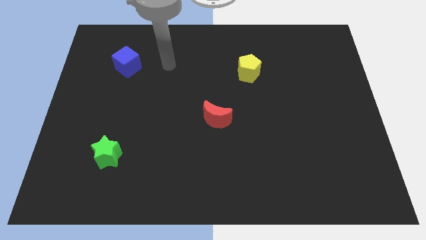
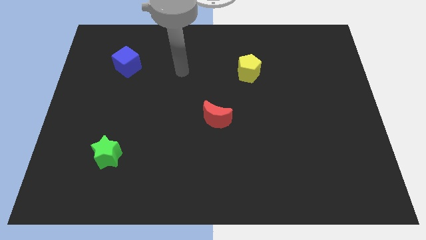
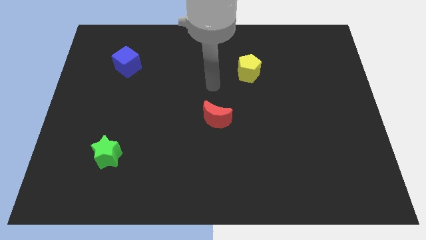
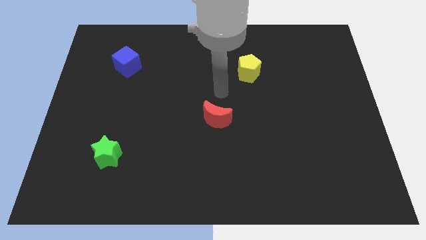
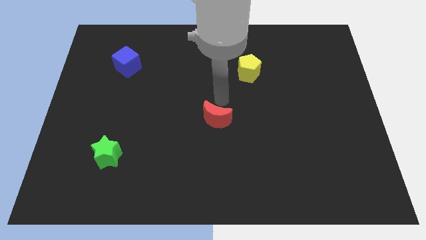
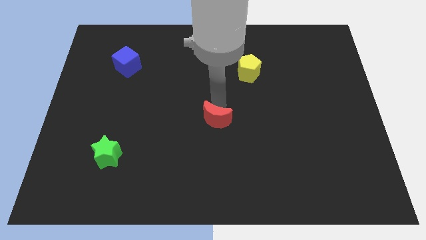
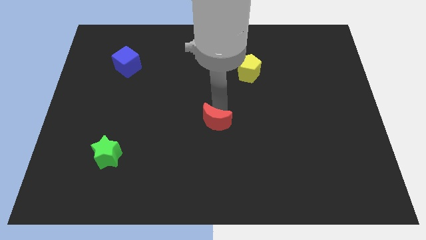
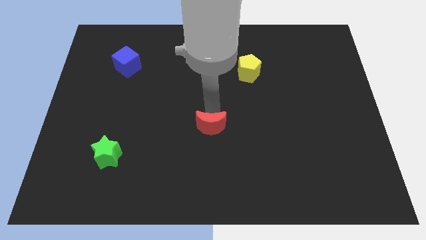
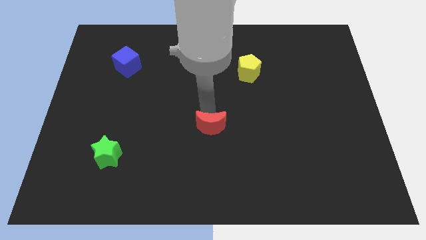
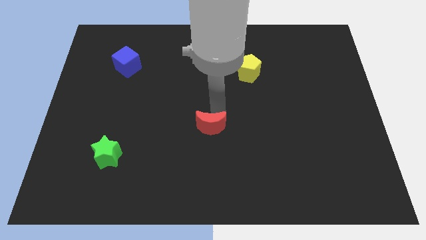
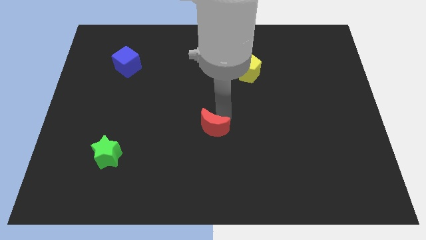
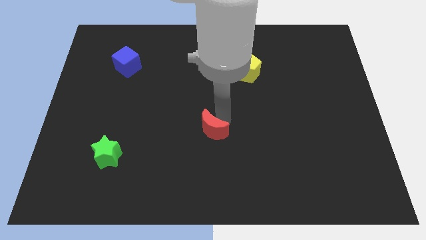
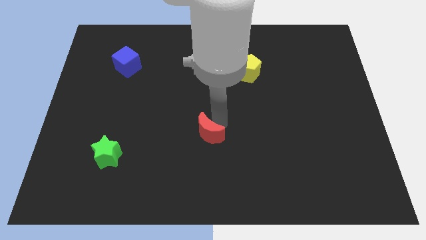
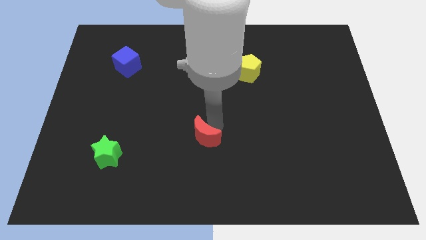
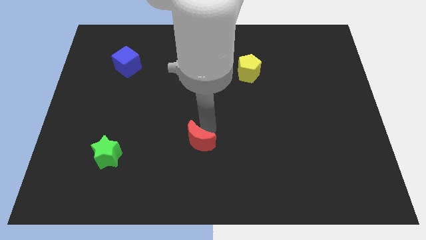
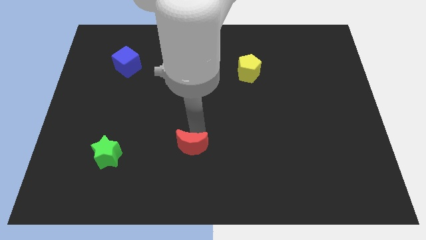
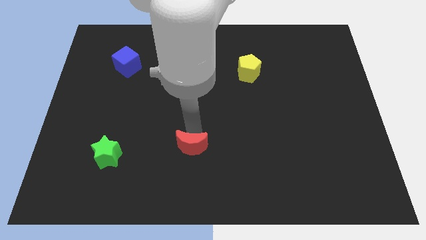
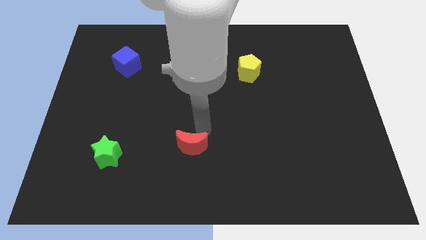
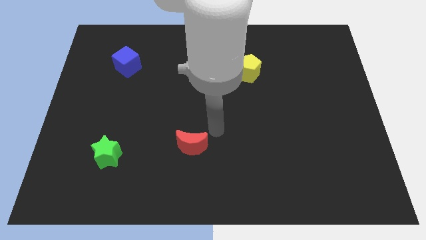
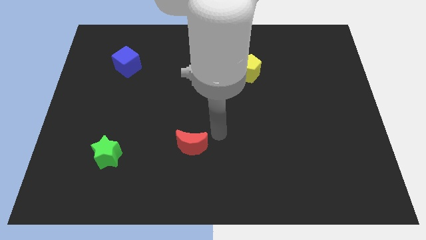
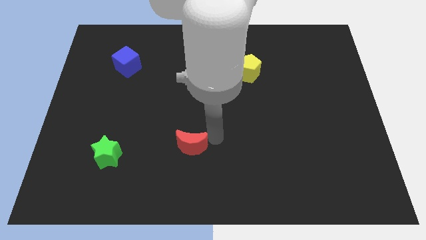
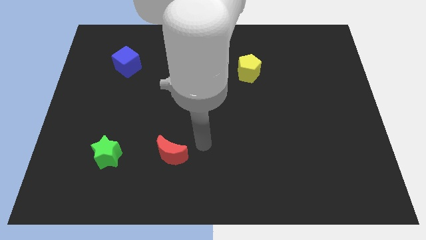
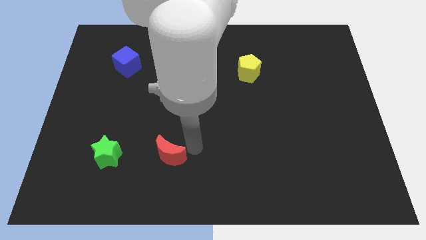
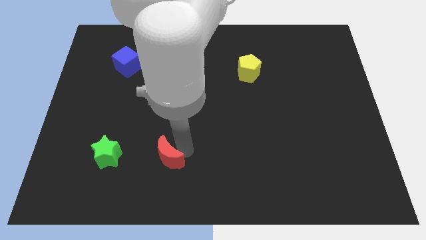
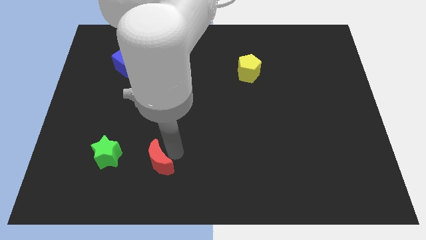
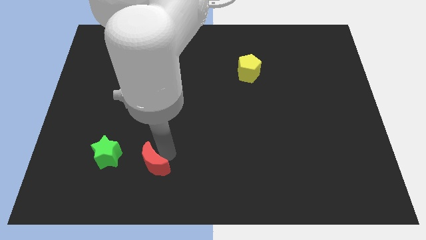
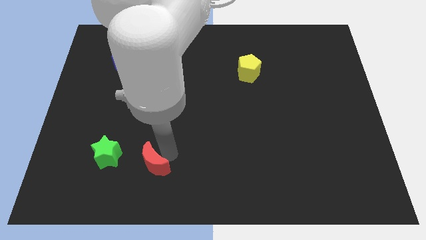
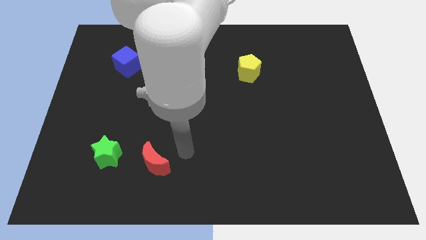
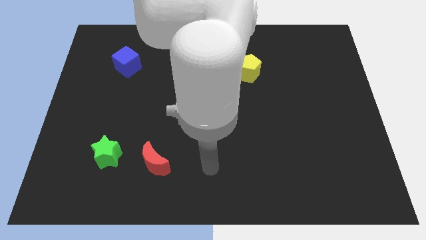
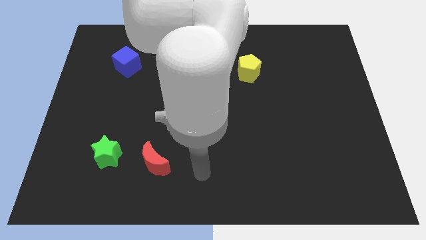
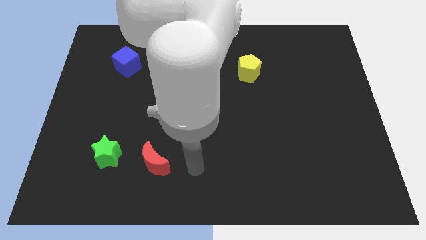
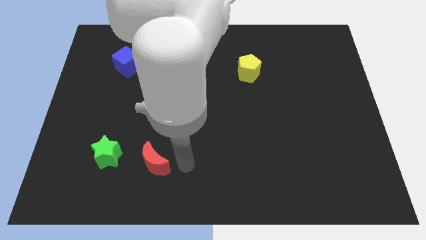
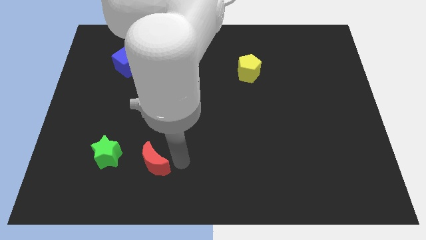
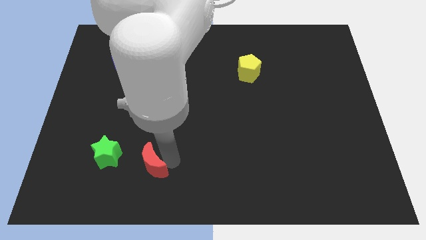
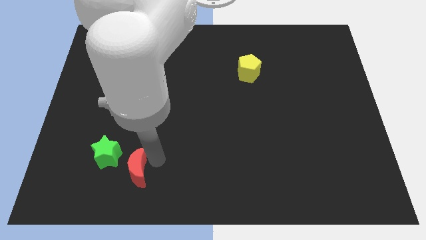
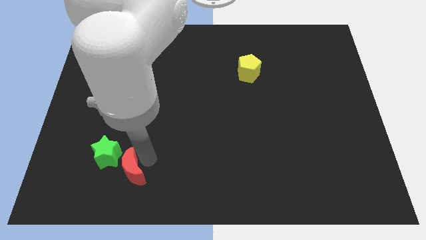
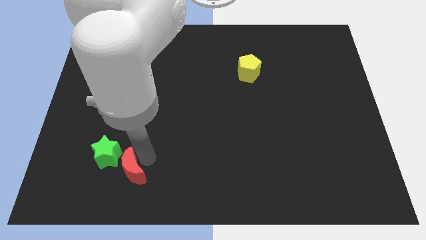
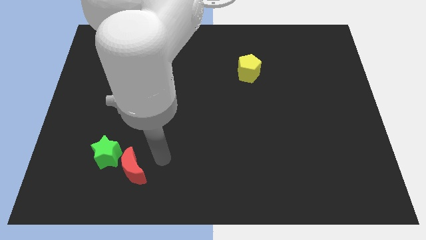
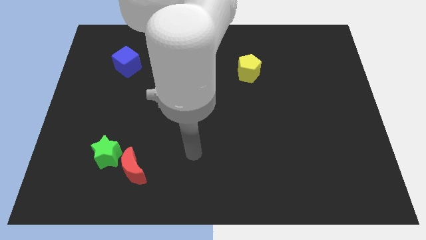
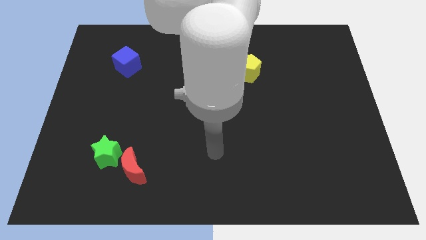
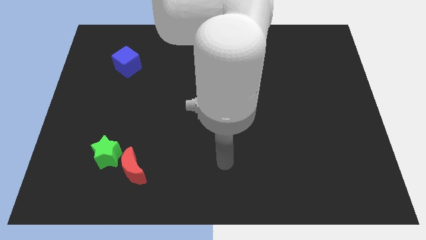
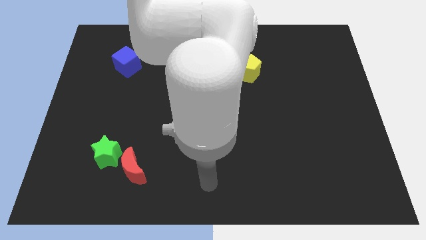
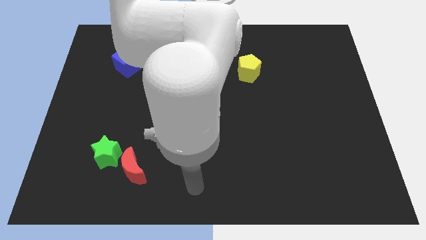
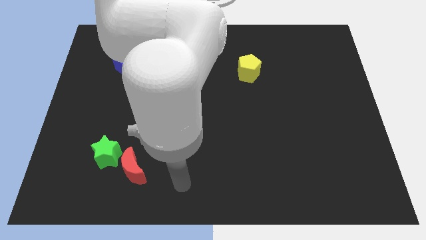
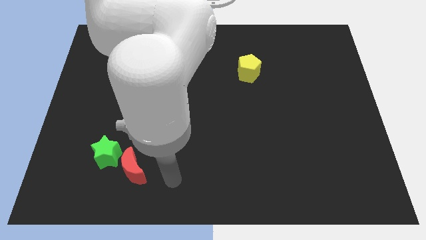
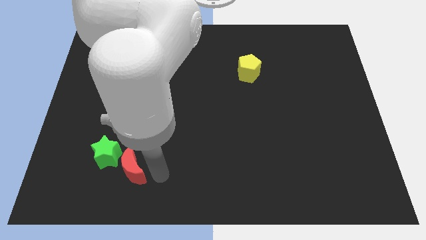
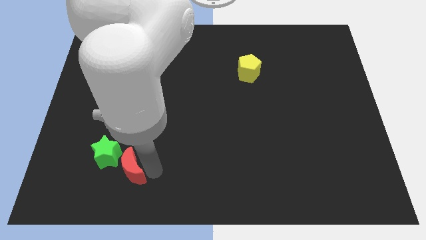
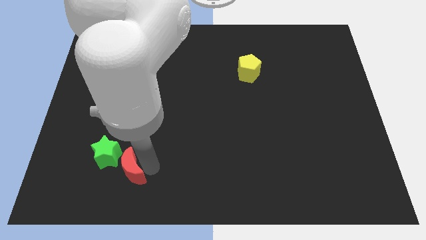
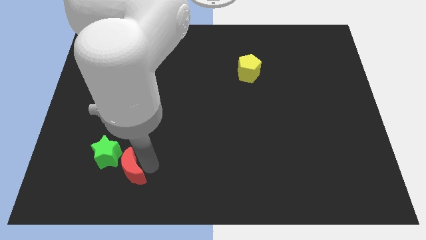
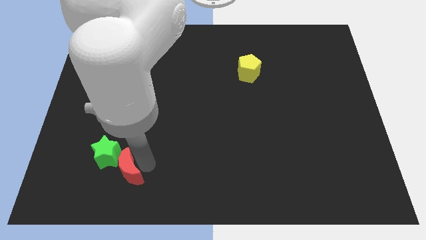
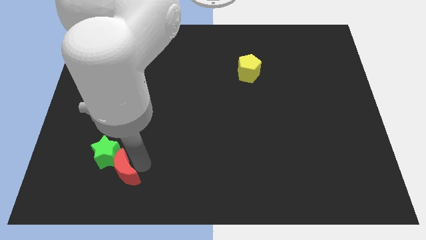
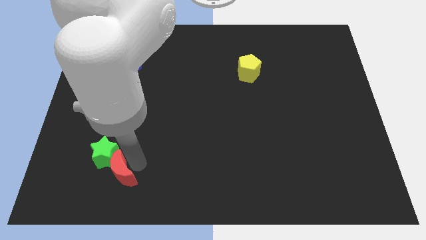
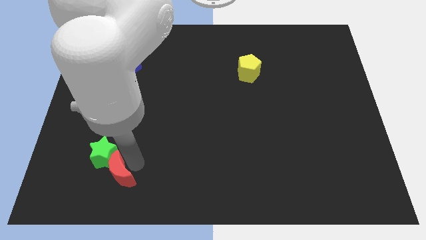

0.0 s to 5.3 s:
push the red block next to the green block

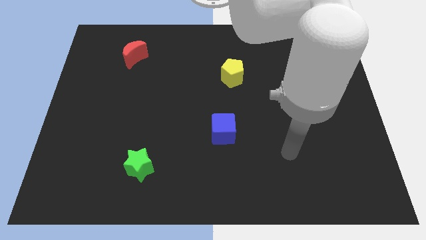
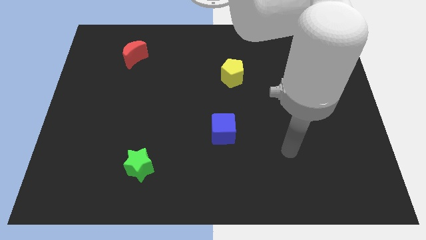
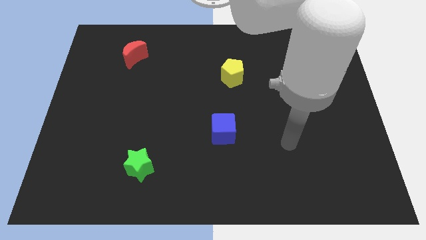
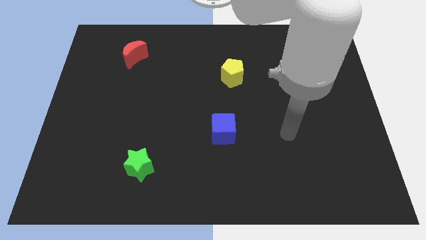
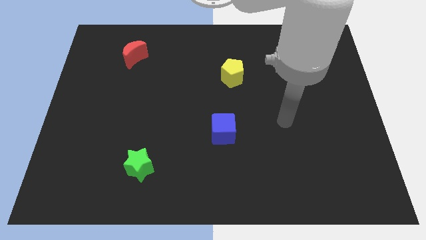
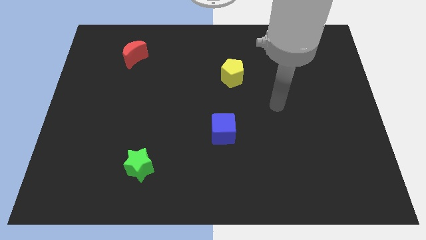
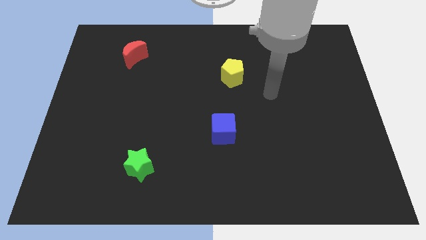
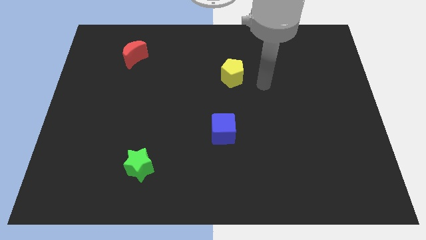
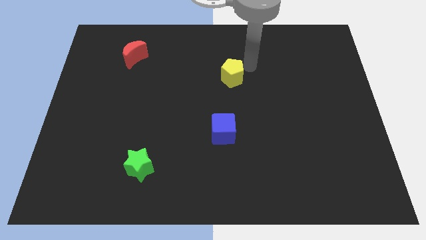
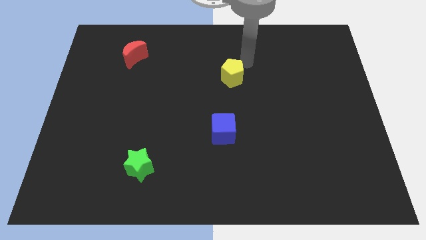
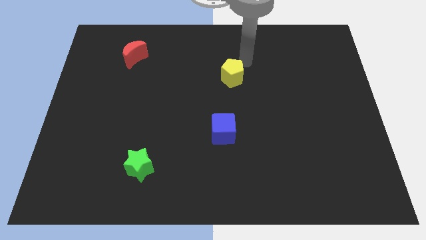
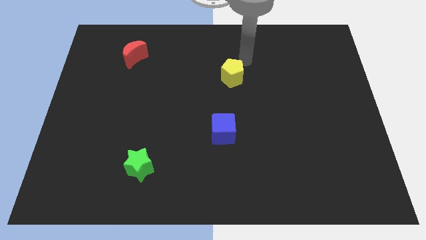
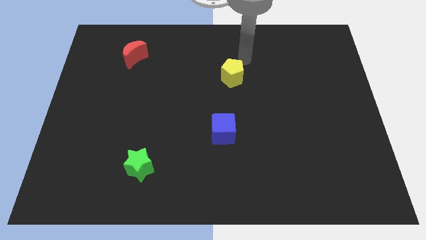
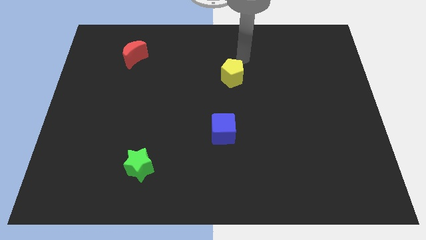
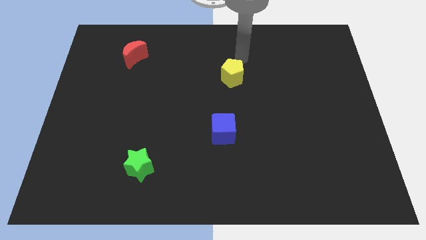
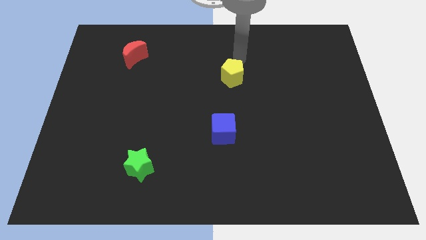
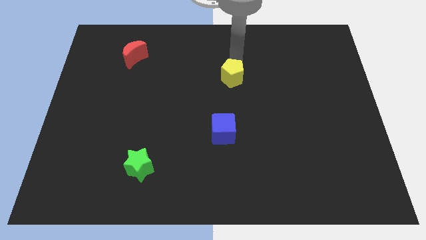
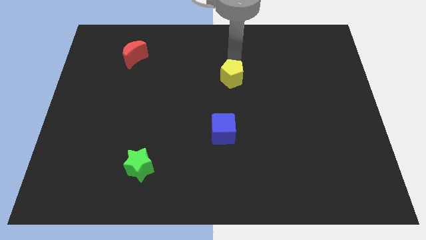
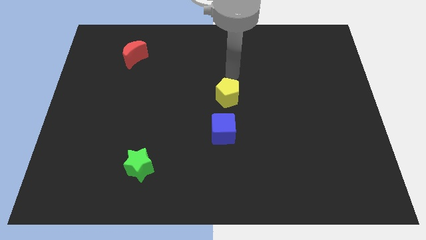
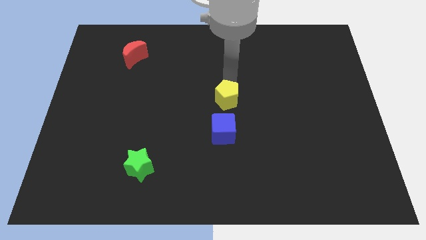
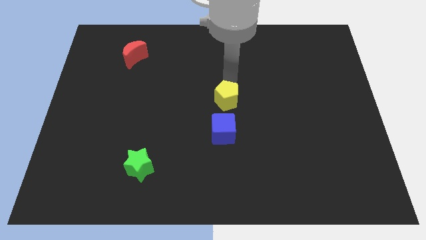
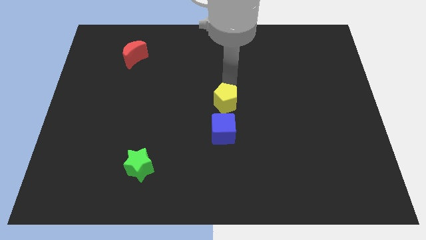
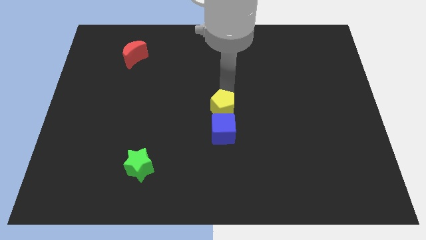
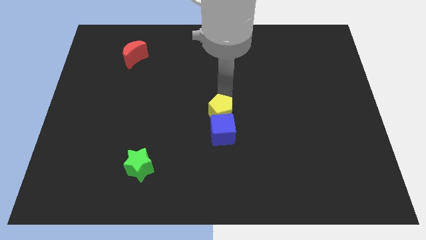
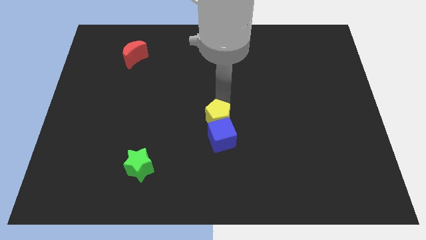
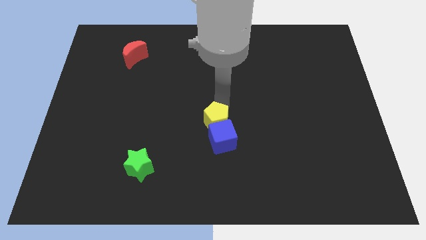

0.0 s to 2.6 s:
push the pentagon close to the blue cube

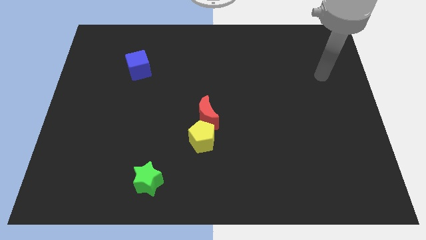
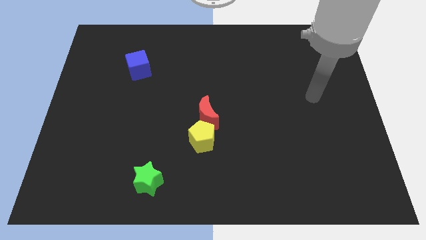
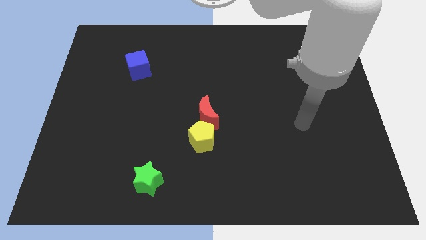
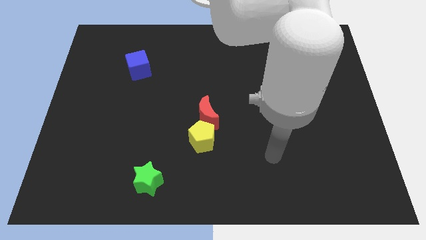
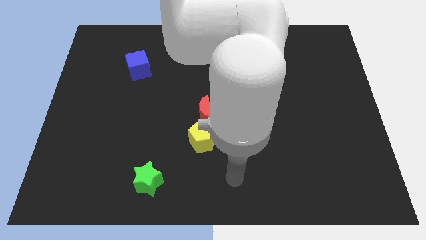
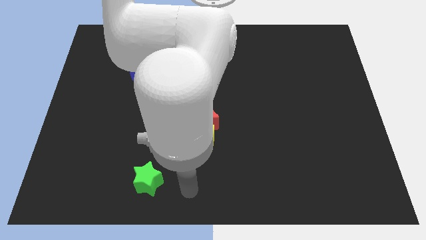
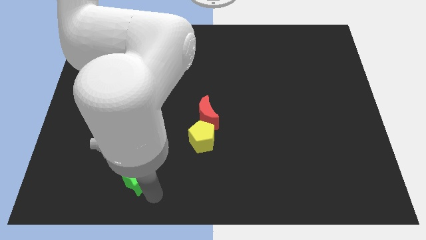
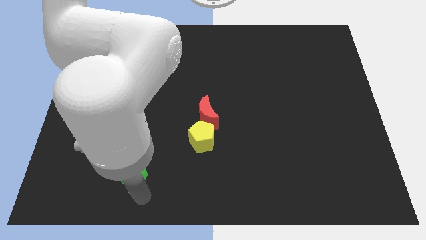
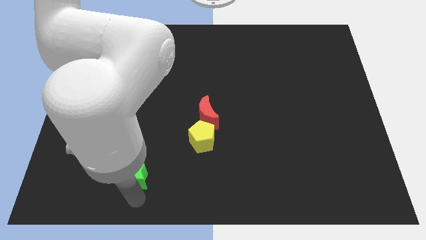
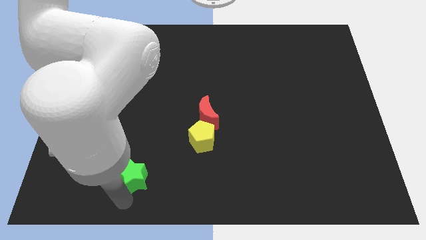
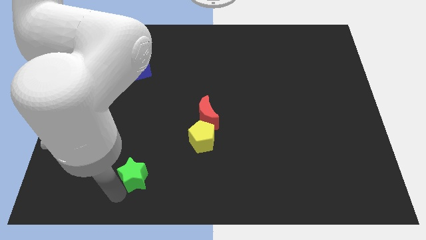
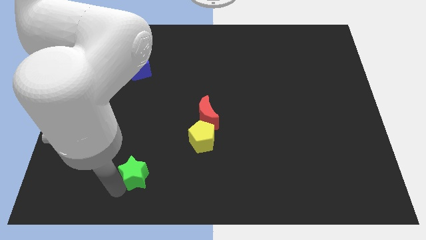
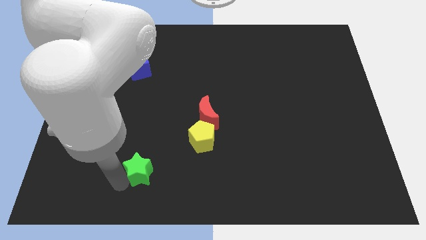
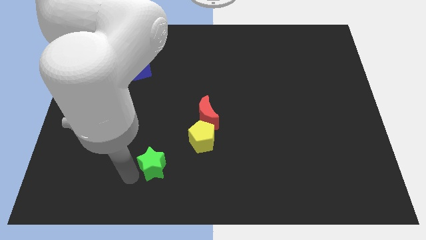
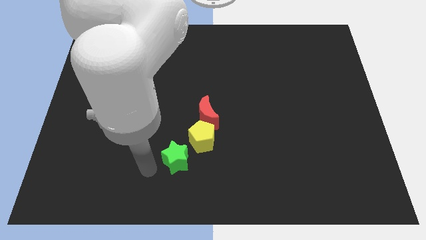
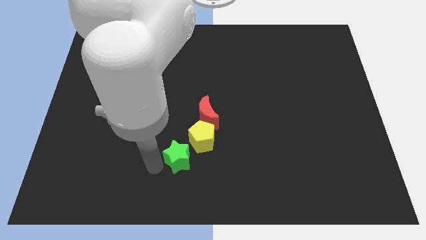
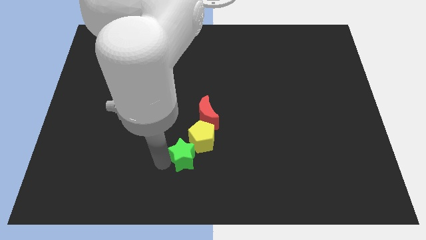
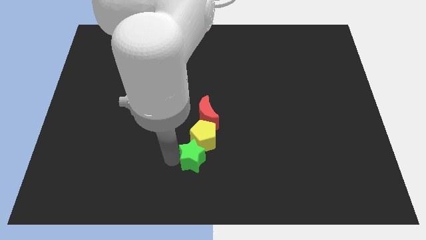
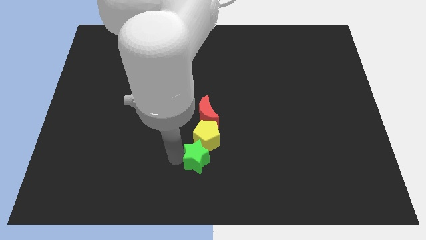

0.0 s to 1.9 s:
move the green block close to the pentagon
